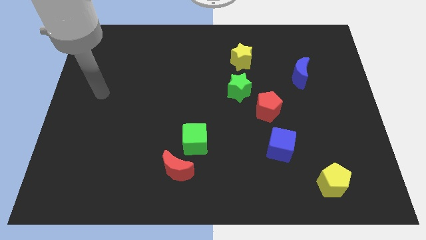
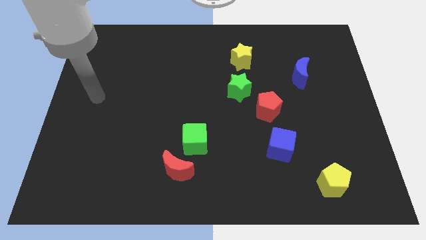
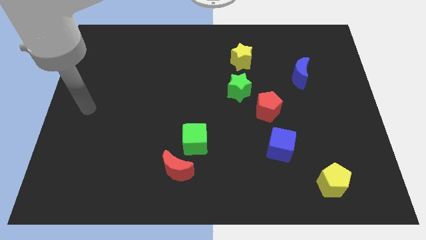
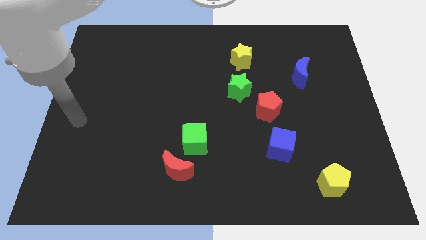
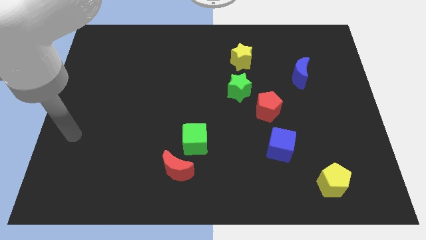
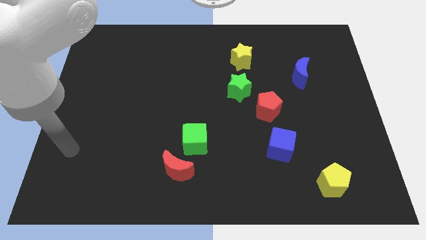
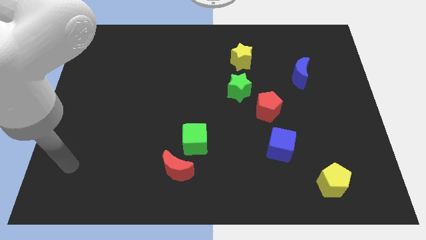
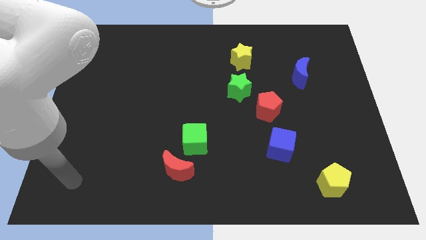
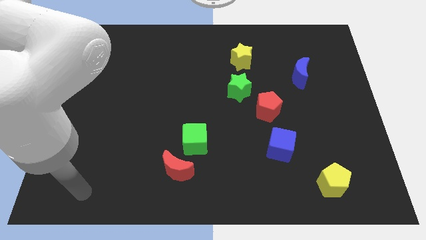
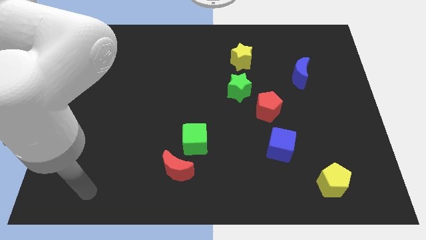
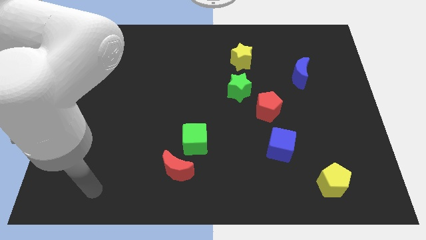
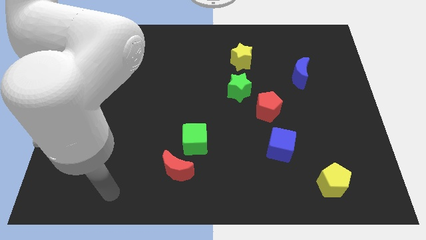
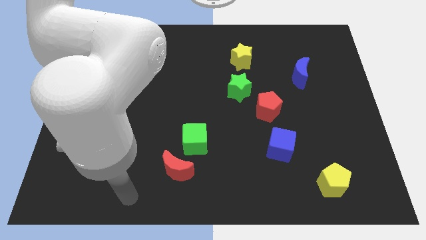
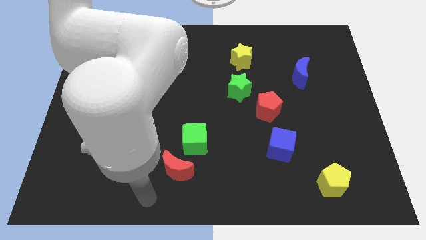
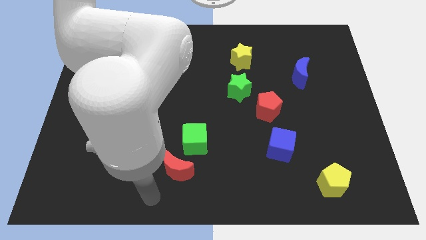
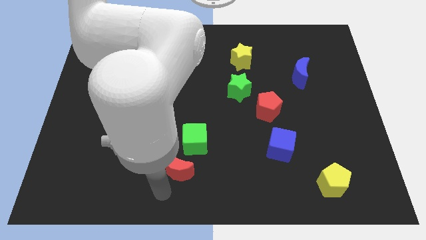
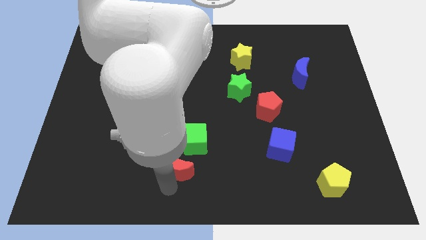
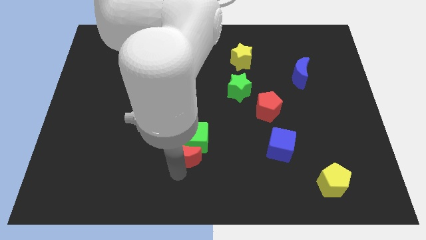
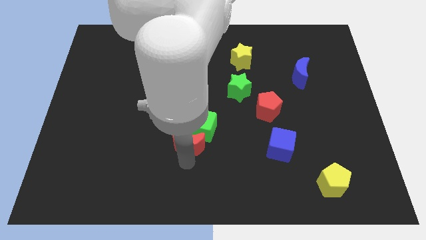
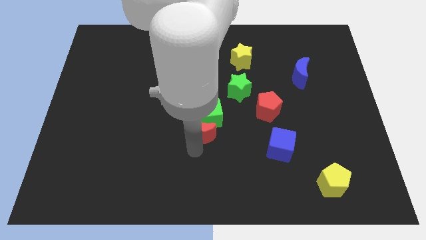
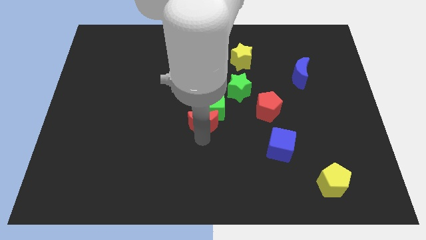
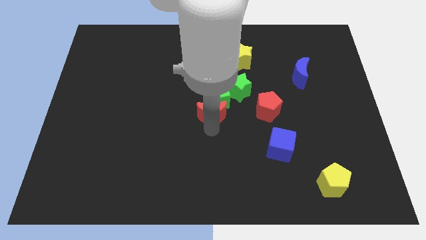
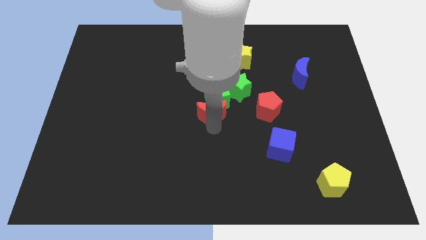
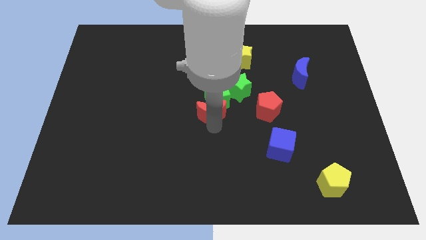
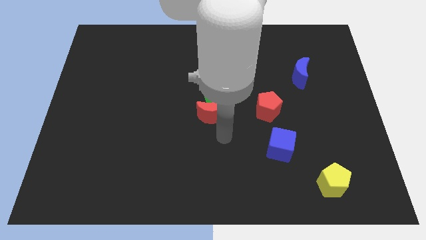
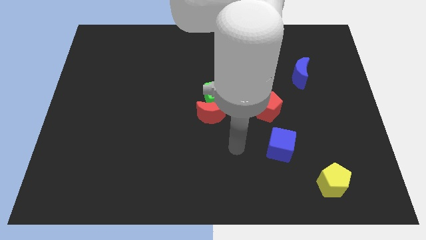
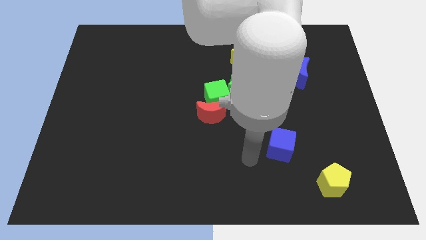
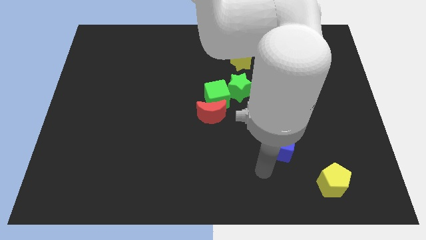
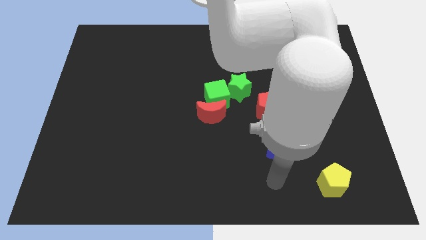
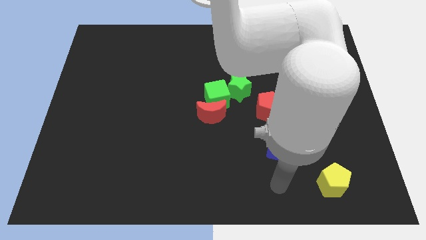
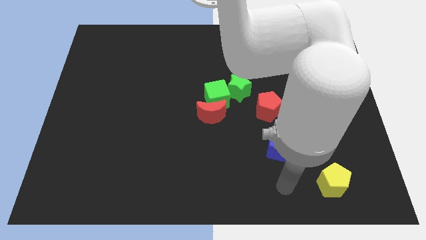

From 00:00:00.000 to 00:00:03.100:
push the red crescent and the green cube to the center

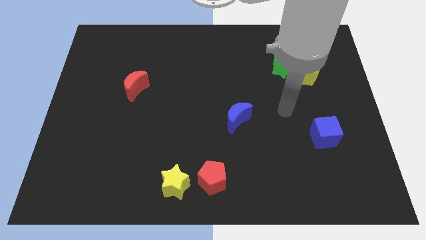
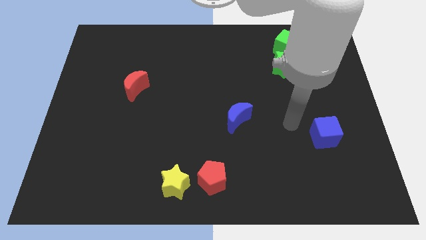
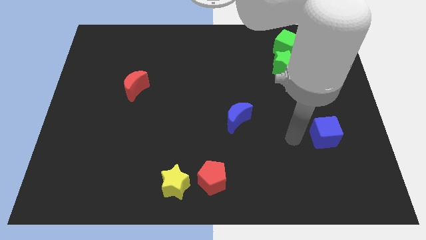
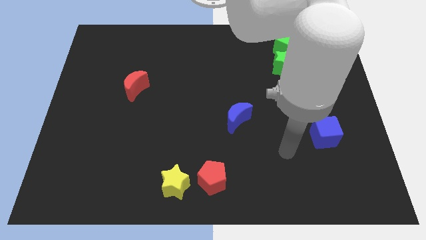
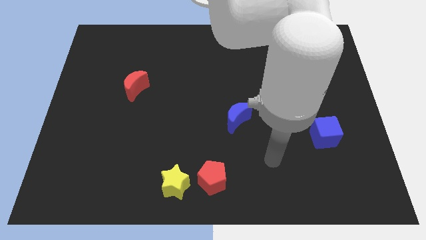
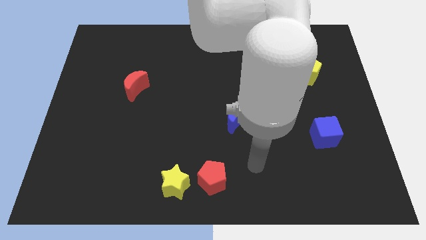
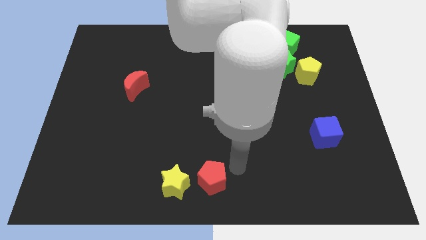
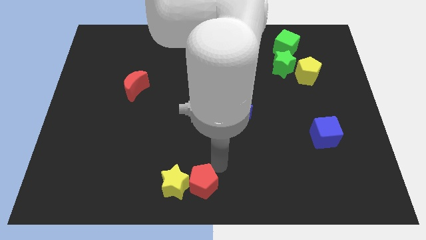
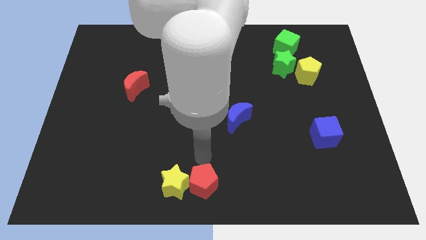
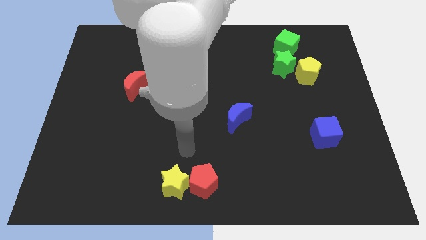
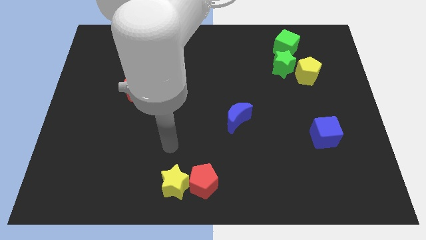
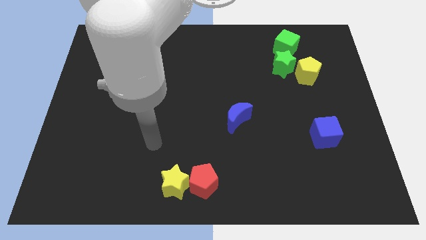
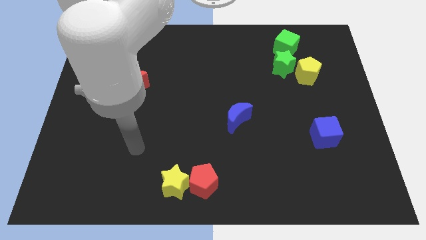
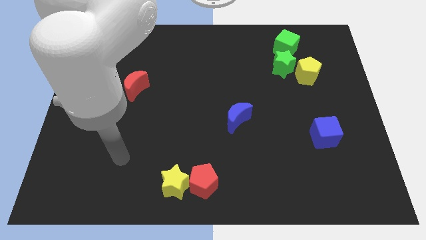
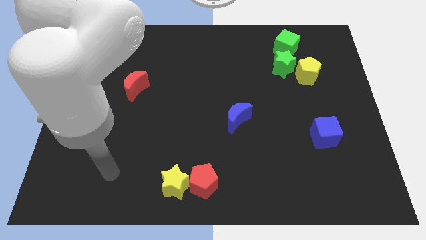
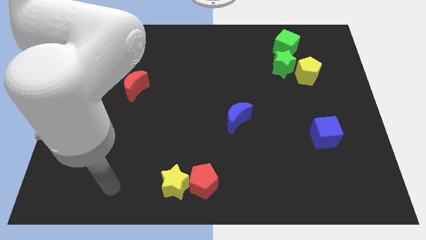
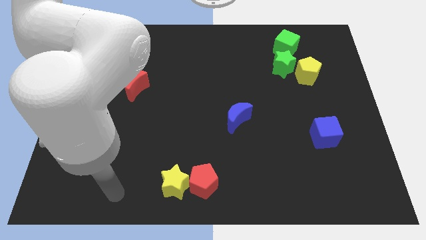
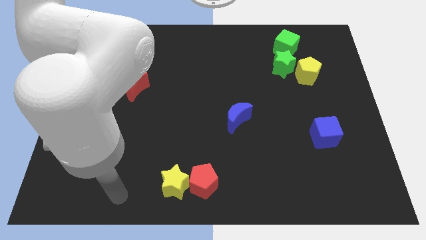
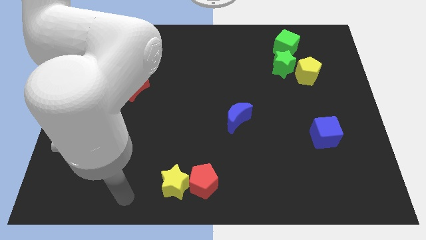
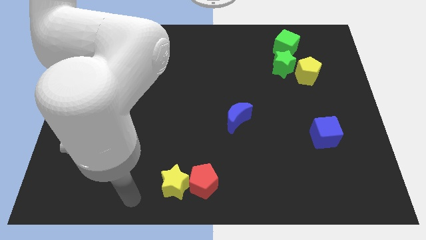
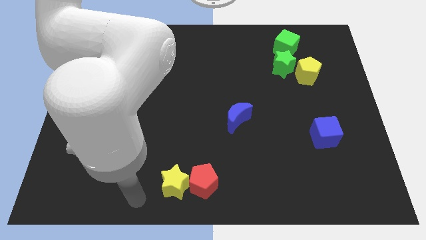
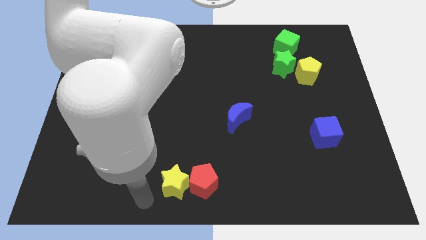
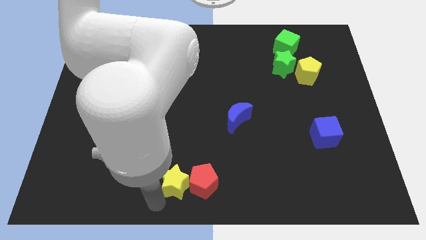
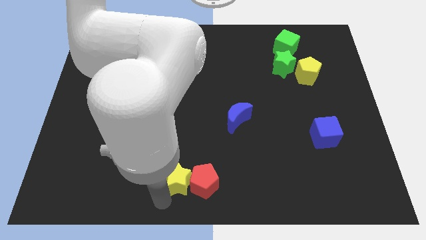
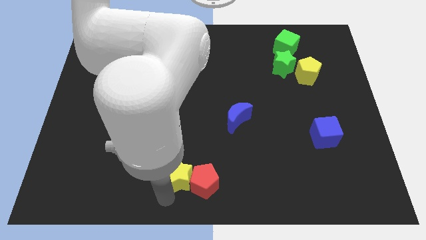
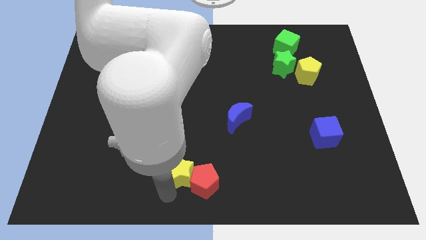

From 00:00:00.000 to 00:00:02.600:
adjust the red pentagona and the yellow star at the bottom center of the board

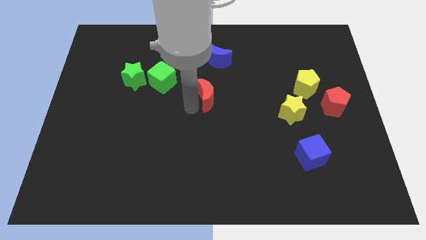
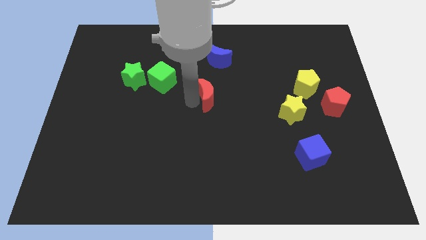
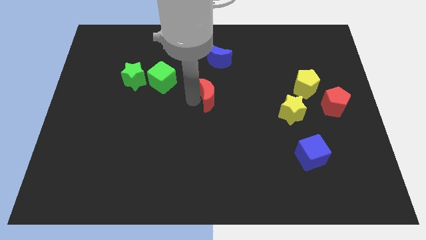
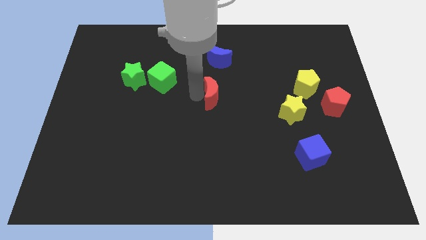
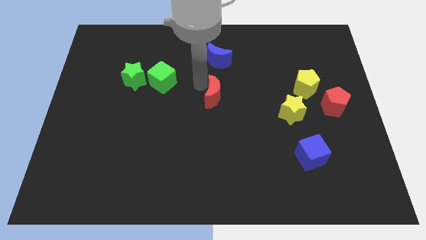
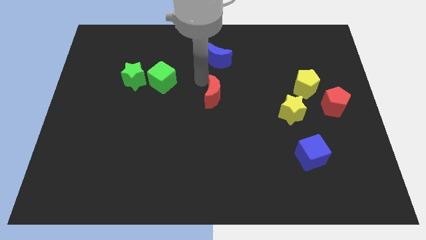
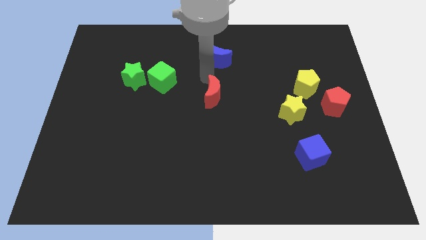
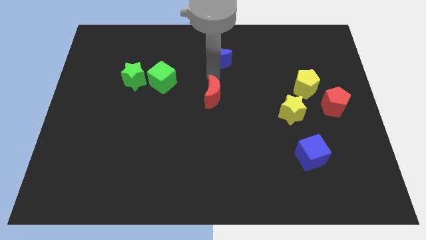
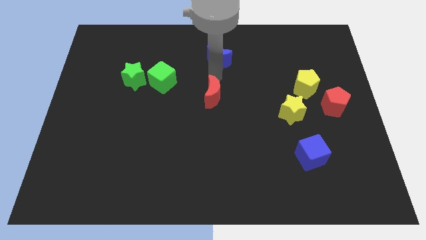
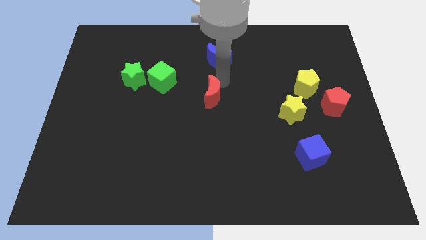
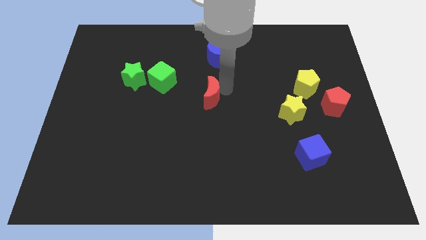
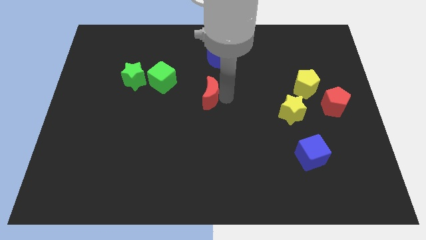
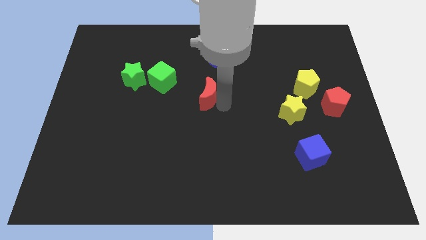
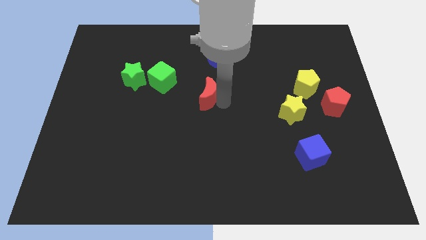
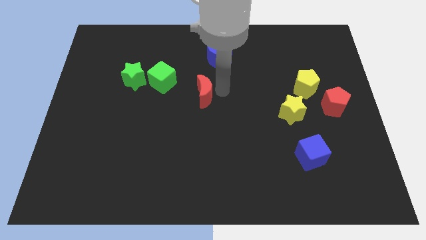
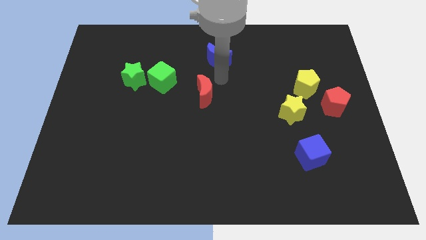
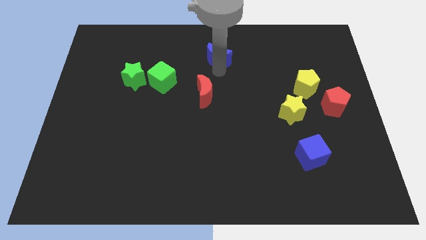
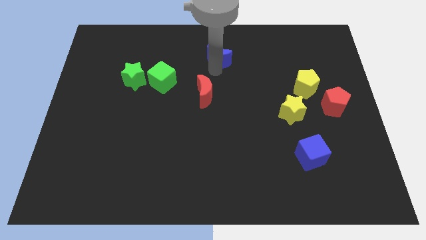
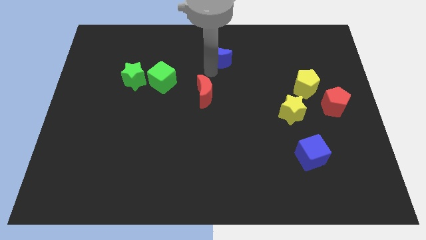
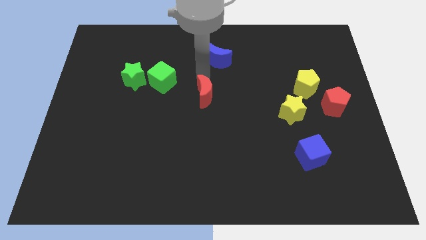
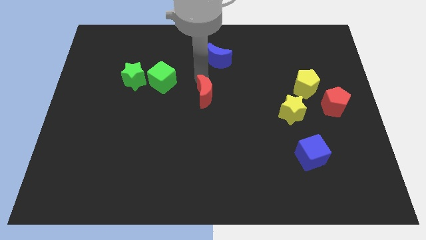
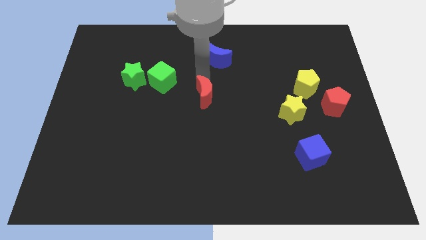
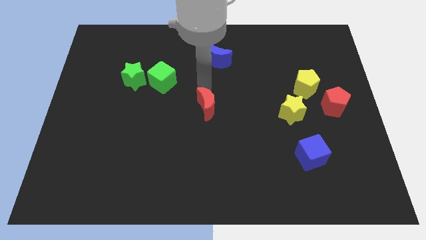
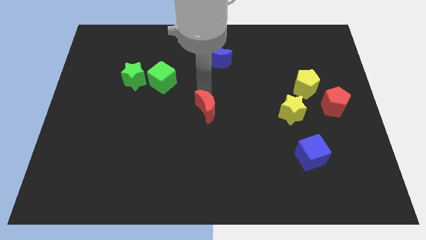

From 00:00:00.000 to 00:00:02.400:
slightly move down the red moon

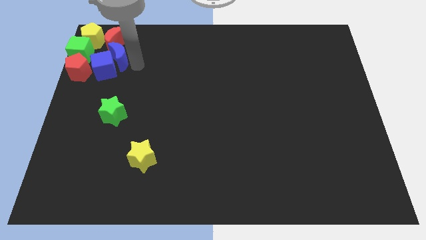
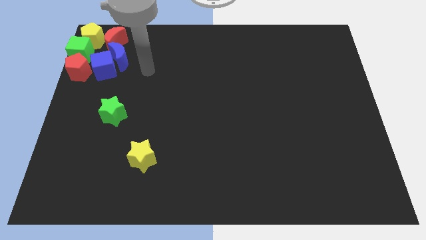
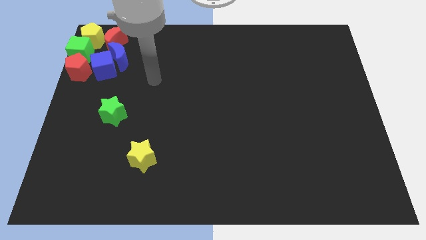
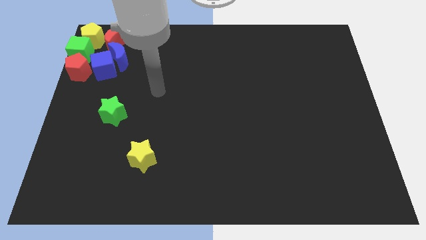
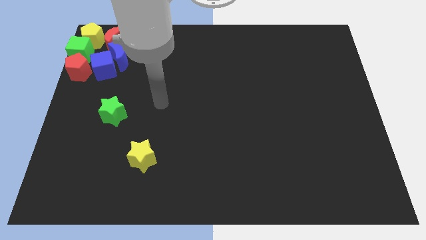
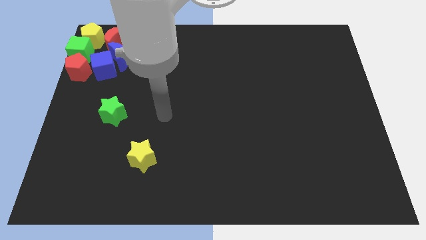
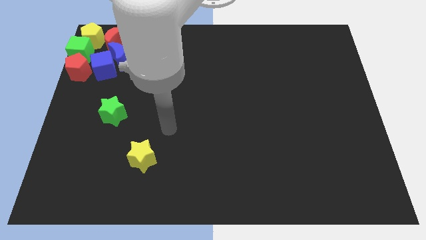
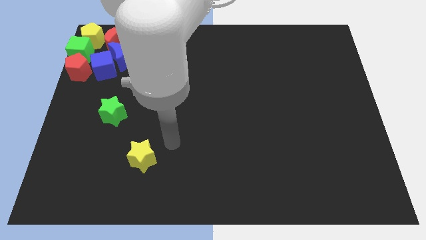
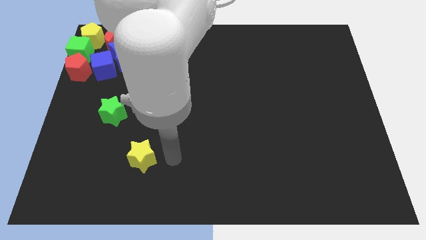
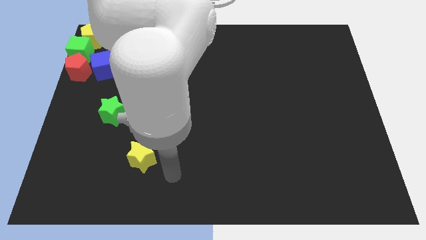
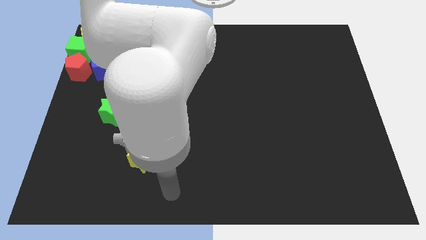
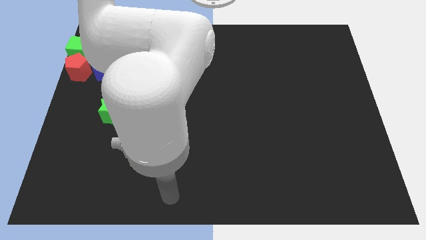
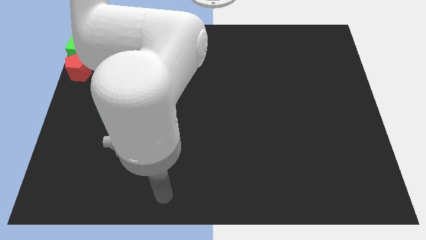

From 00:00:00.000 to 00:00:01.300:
move the arm away from the blue moon
